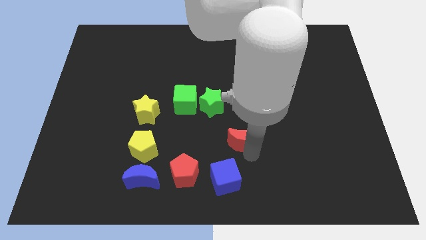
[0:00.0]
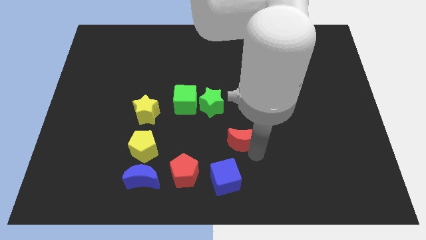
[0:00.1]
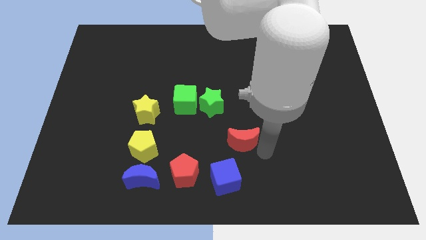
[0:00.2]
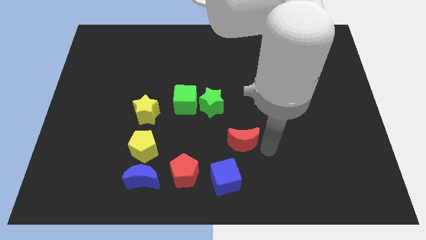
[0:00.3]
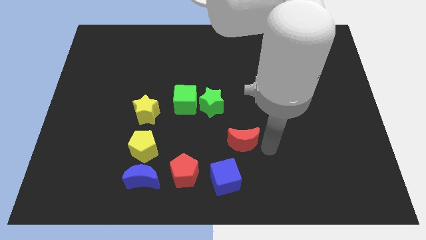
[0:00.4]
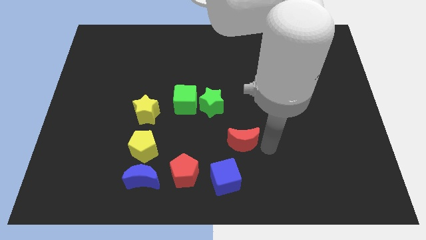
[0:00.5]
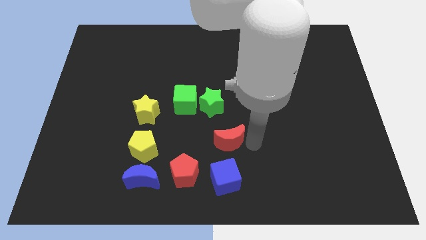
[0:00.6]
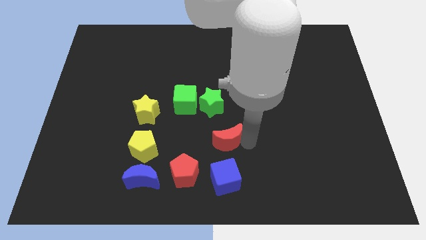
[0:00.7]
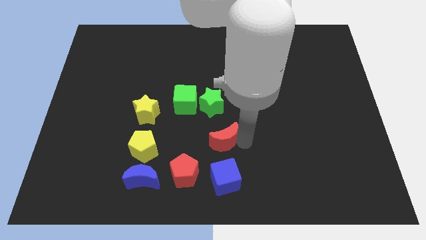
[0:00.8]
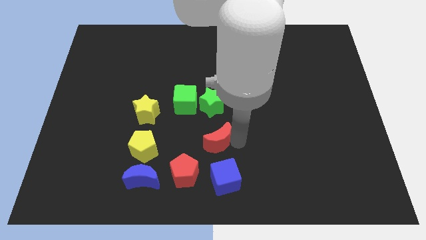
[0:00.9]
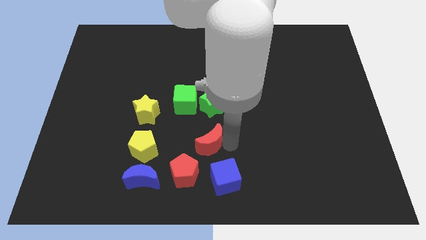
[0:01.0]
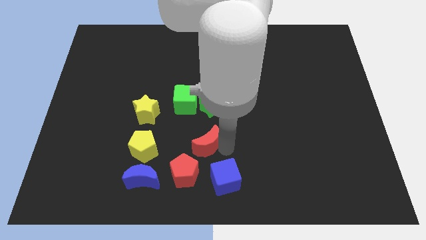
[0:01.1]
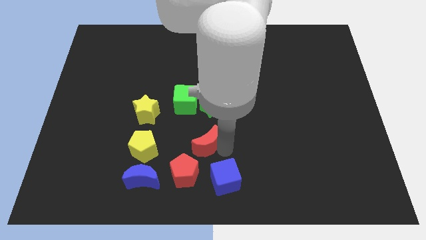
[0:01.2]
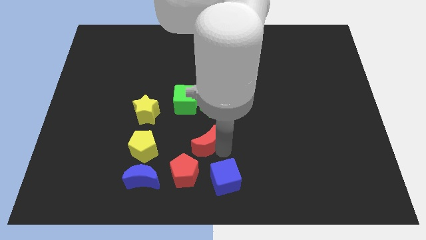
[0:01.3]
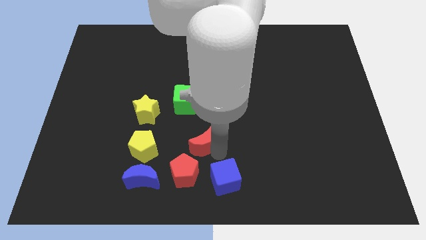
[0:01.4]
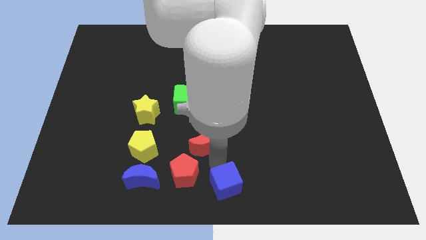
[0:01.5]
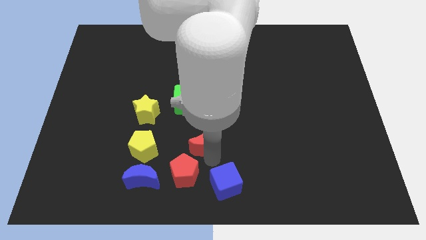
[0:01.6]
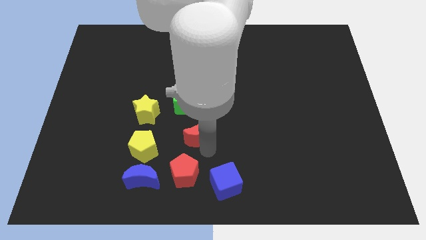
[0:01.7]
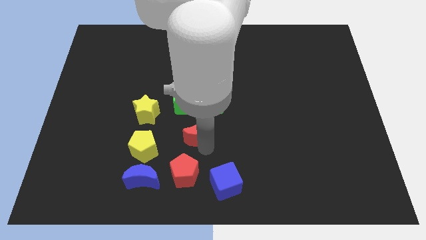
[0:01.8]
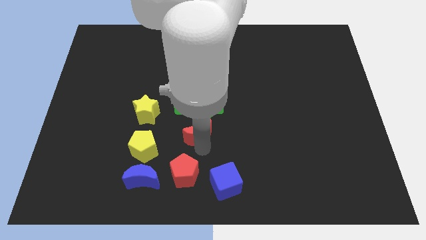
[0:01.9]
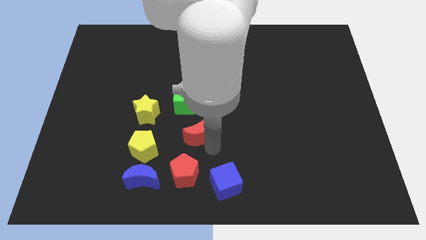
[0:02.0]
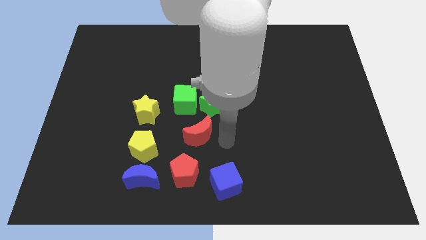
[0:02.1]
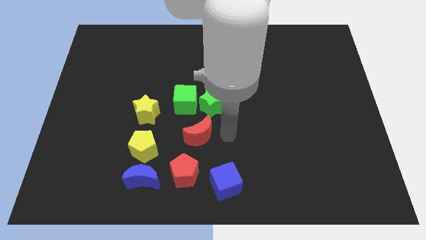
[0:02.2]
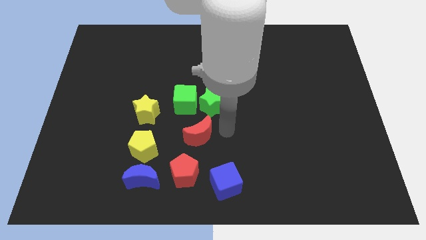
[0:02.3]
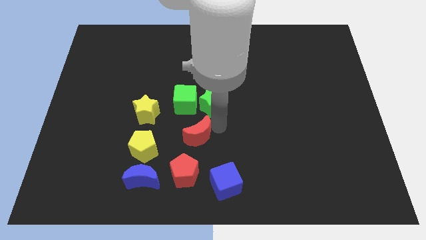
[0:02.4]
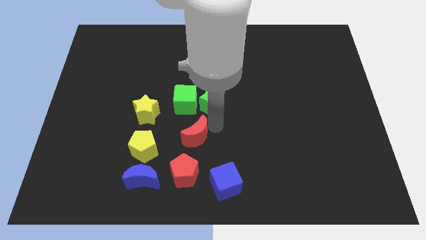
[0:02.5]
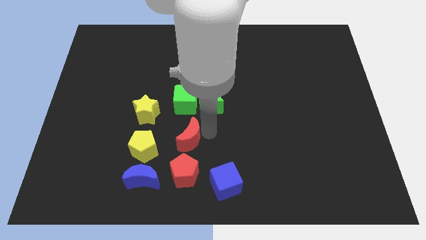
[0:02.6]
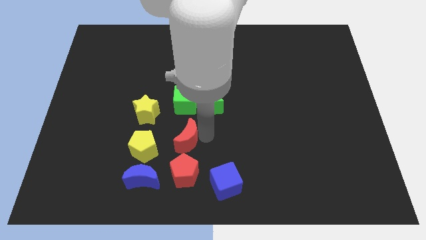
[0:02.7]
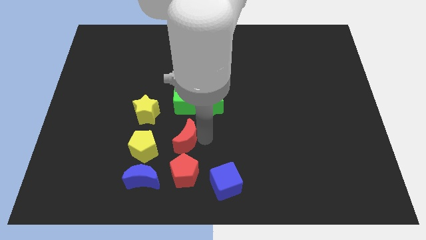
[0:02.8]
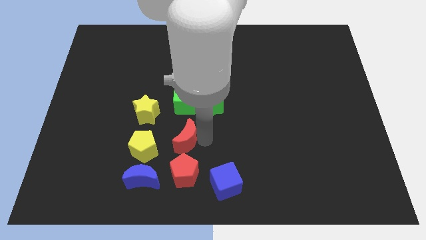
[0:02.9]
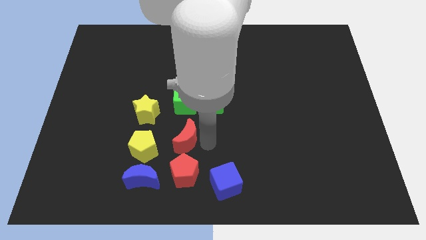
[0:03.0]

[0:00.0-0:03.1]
move the red crescent to the top of the red pentagon

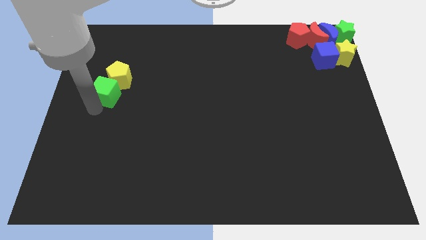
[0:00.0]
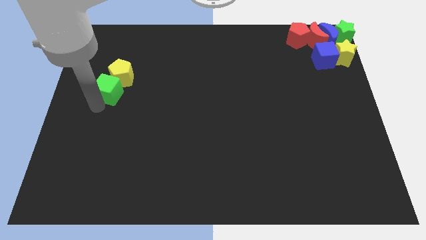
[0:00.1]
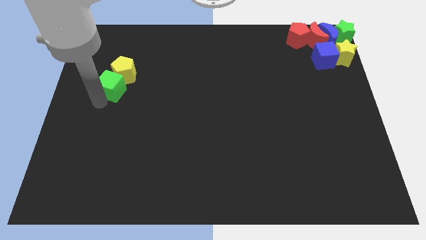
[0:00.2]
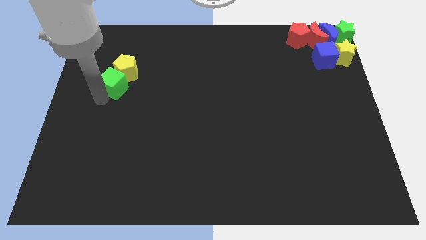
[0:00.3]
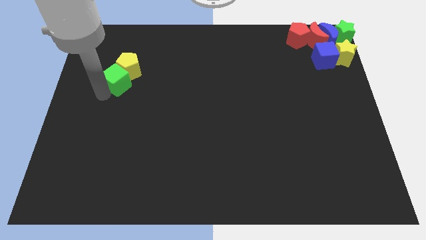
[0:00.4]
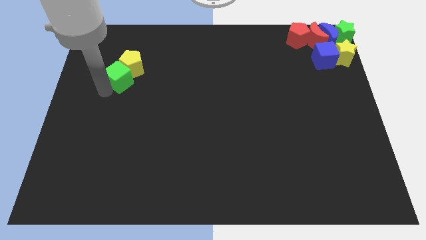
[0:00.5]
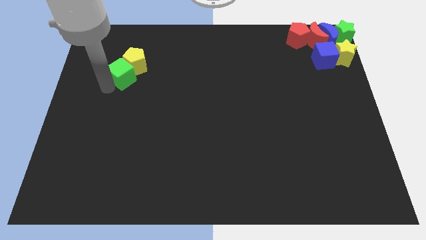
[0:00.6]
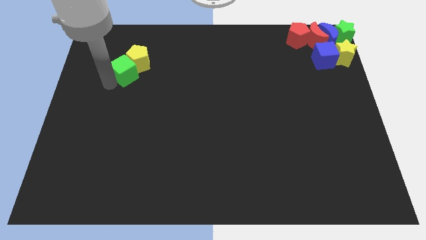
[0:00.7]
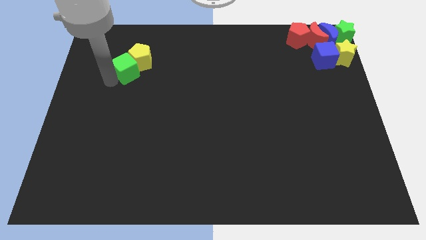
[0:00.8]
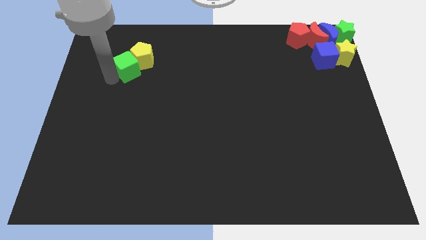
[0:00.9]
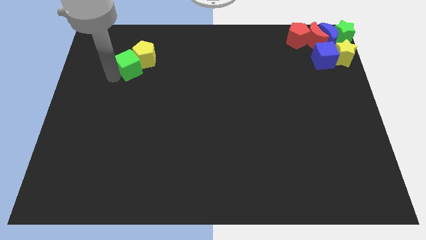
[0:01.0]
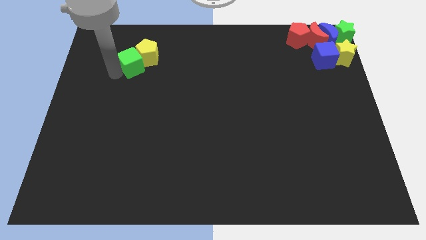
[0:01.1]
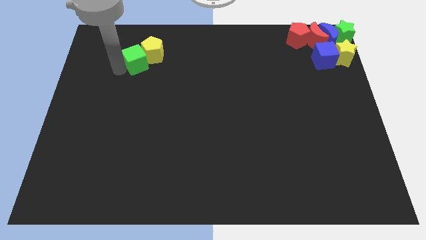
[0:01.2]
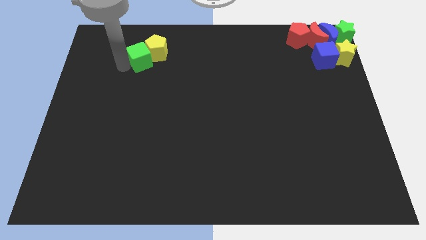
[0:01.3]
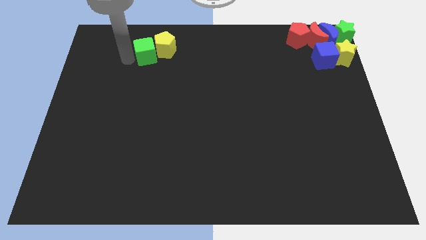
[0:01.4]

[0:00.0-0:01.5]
push the yellow pentagon and green cube slightly upwards

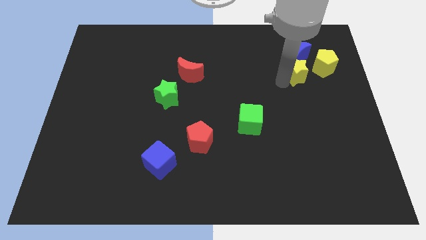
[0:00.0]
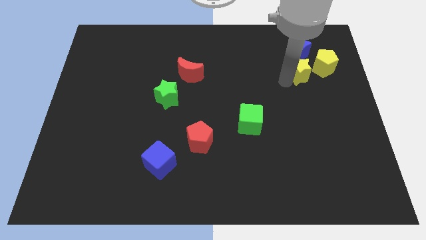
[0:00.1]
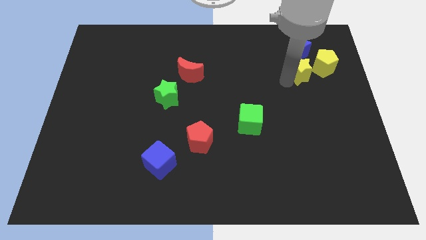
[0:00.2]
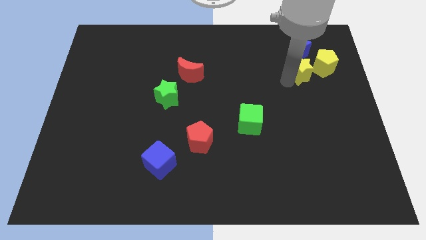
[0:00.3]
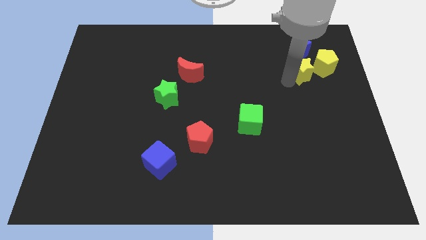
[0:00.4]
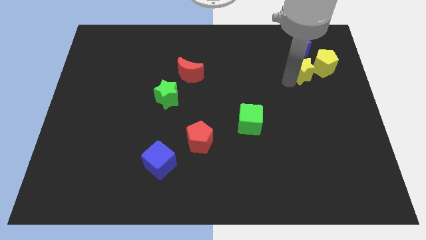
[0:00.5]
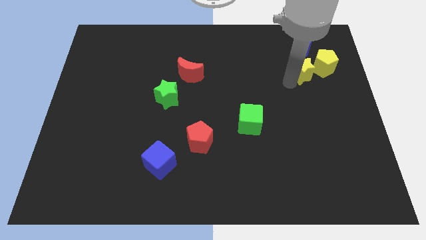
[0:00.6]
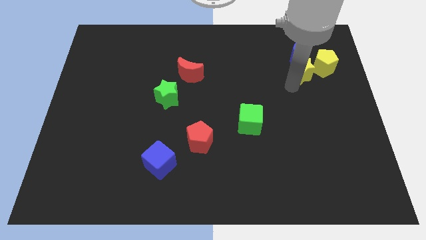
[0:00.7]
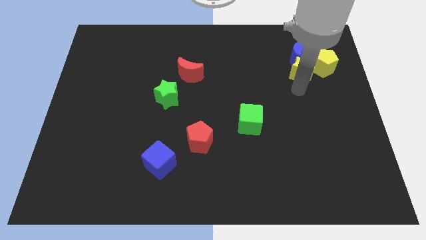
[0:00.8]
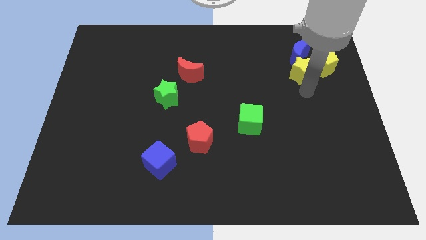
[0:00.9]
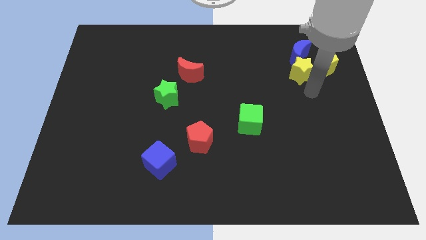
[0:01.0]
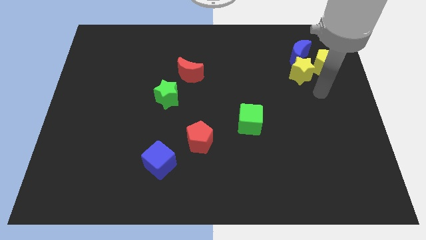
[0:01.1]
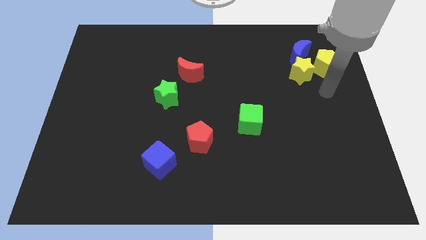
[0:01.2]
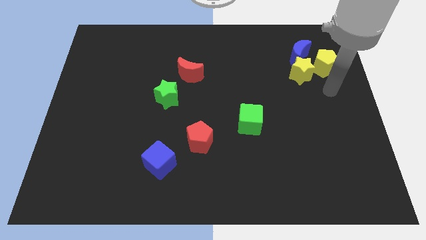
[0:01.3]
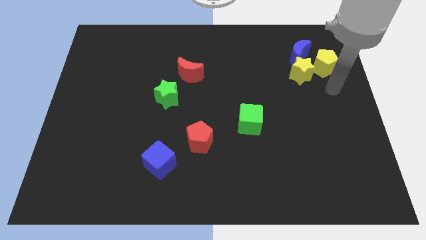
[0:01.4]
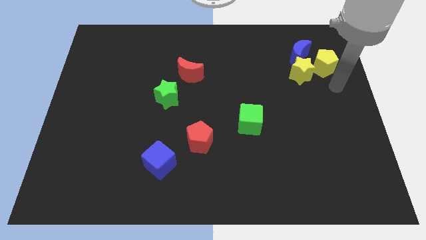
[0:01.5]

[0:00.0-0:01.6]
slightly push the yellow star into the yellow pentagon

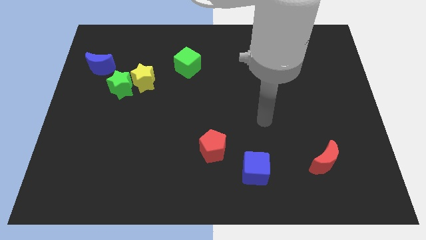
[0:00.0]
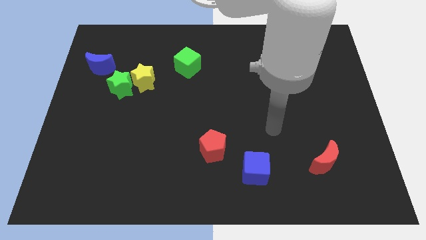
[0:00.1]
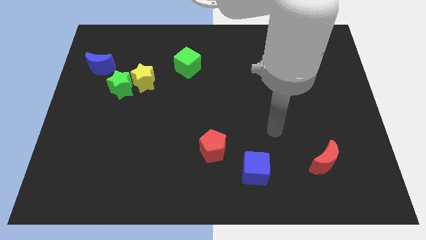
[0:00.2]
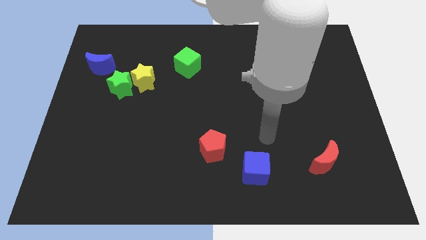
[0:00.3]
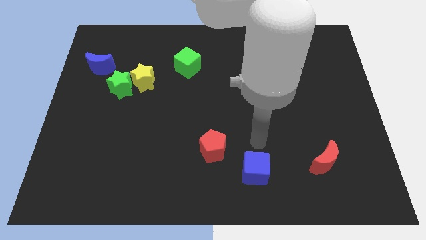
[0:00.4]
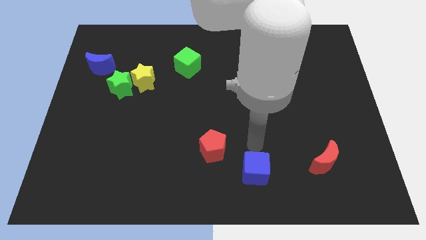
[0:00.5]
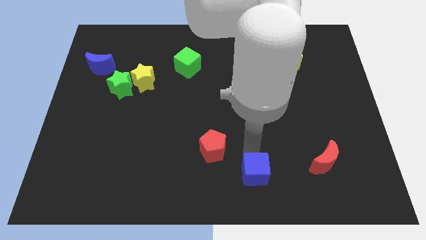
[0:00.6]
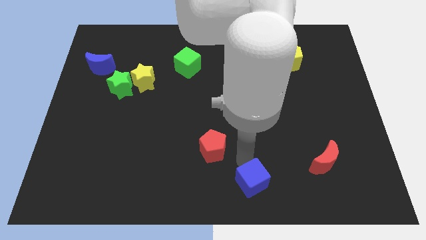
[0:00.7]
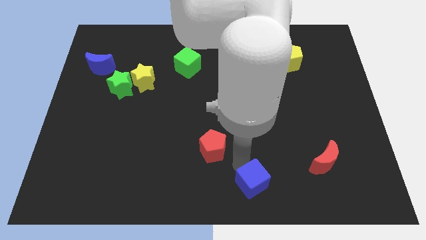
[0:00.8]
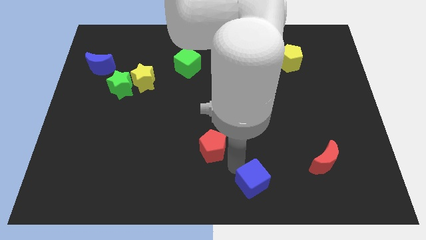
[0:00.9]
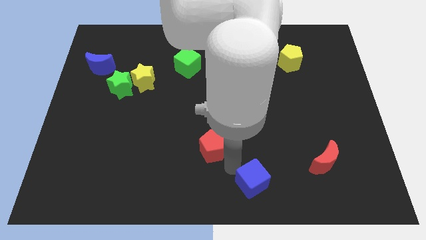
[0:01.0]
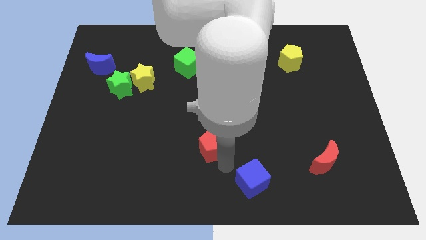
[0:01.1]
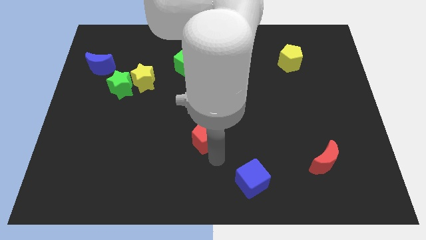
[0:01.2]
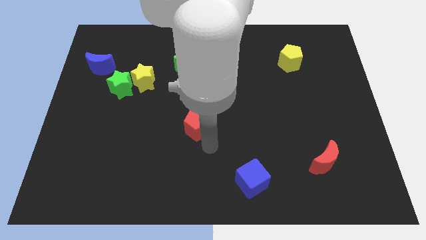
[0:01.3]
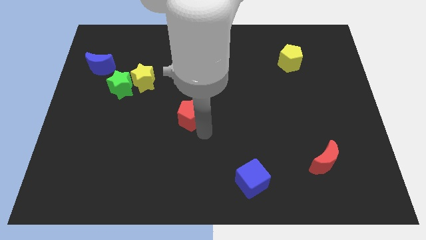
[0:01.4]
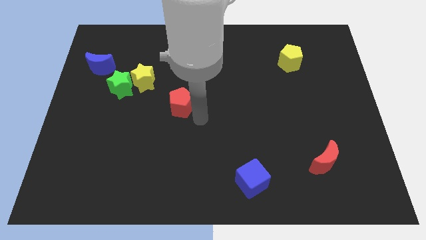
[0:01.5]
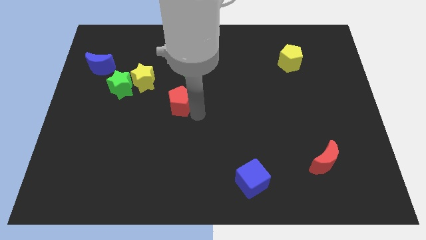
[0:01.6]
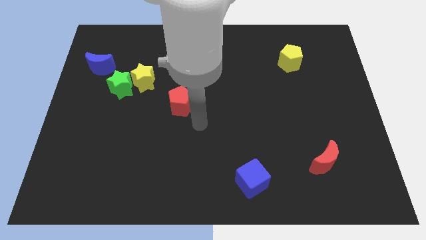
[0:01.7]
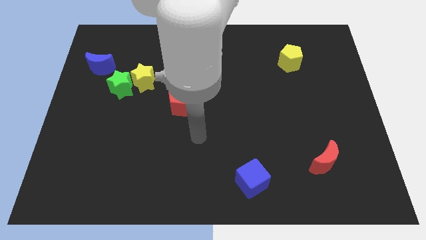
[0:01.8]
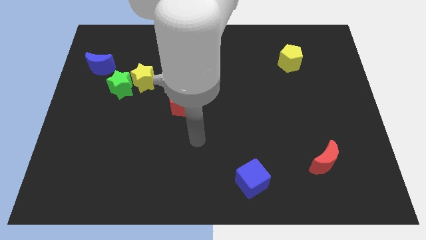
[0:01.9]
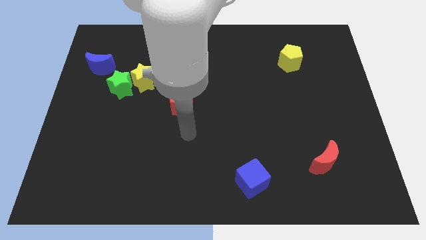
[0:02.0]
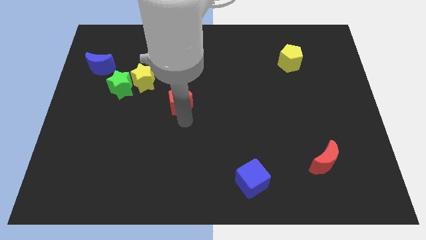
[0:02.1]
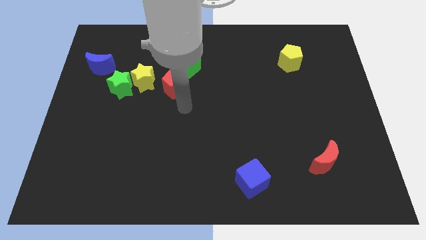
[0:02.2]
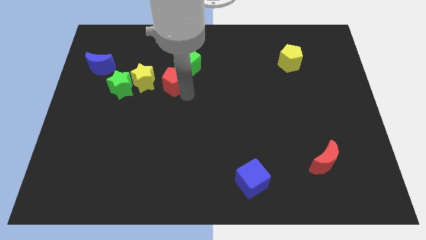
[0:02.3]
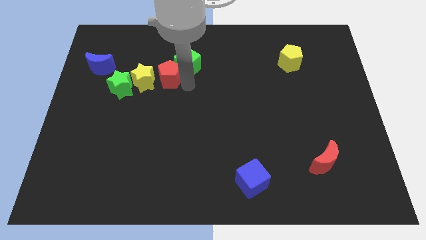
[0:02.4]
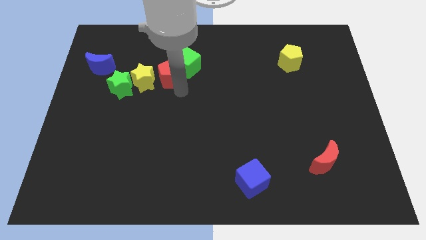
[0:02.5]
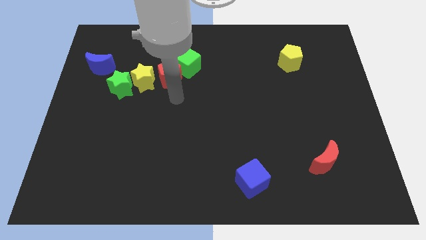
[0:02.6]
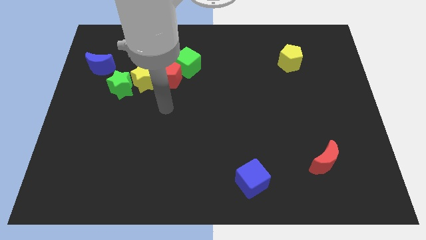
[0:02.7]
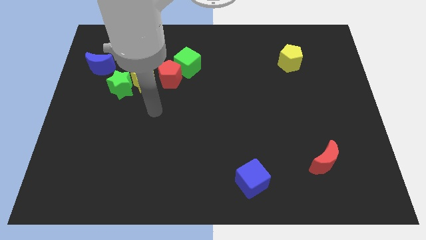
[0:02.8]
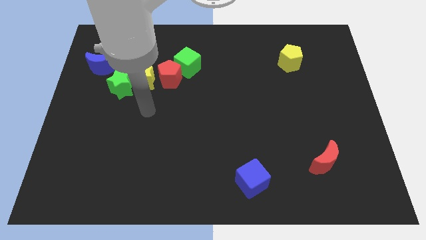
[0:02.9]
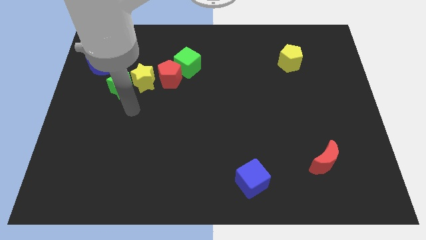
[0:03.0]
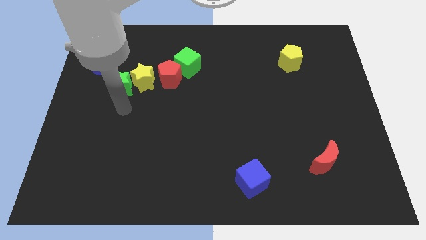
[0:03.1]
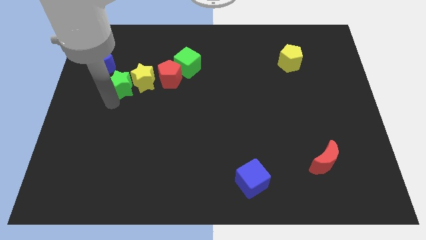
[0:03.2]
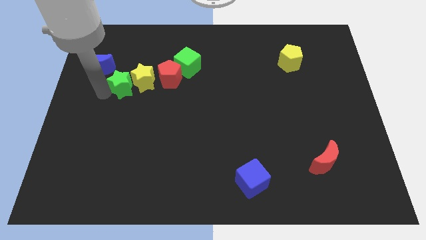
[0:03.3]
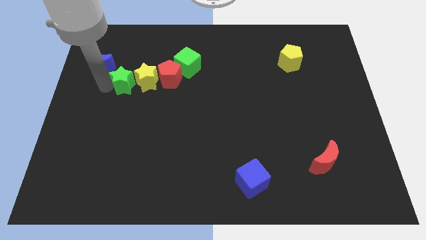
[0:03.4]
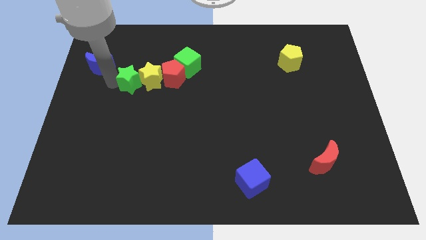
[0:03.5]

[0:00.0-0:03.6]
place the red pentagon to the top left of green cube
